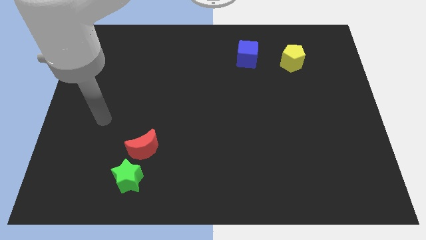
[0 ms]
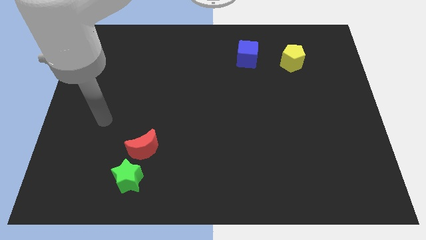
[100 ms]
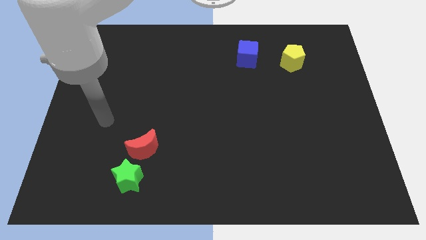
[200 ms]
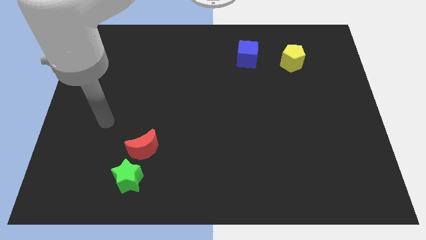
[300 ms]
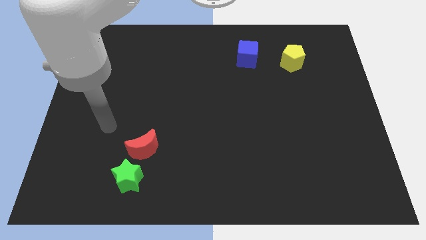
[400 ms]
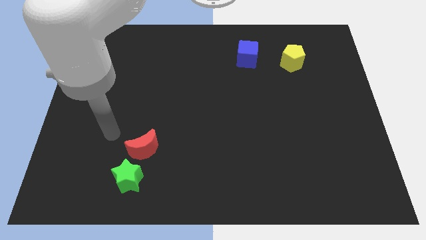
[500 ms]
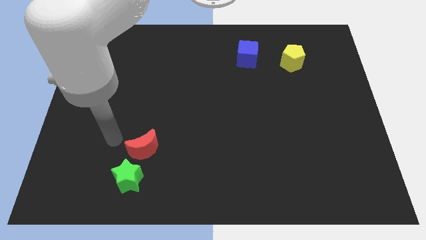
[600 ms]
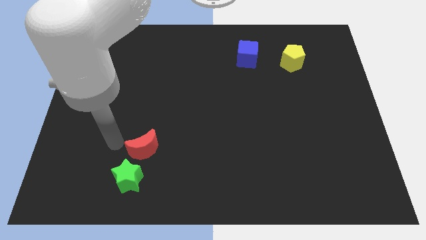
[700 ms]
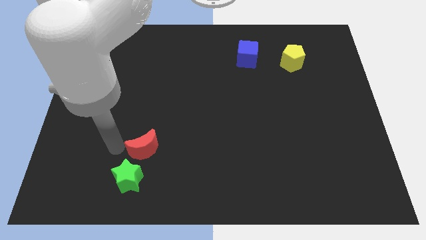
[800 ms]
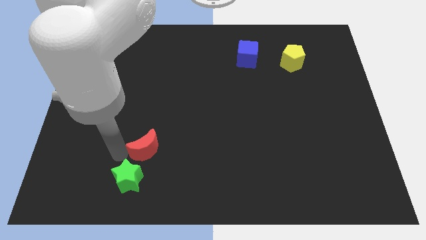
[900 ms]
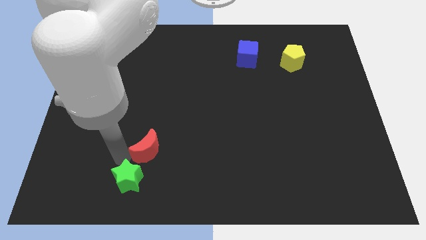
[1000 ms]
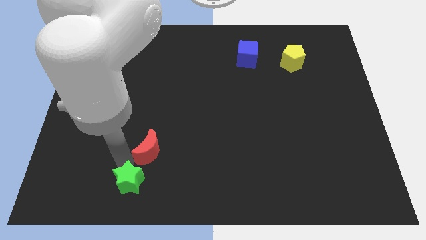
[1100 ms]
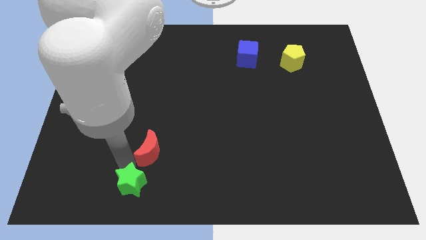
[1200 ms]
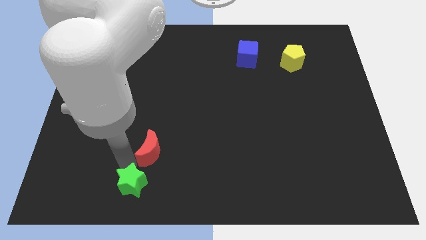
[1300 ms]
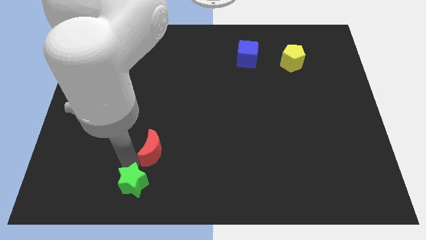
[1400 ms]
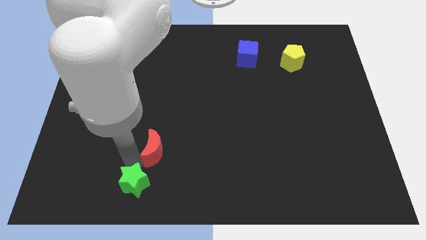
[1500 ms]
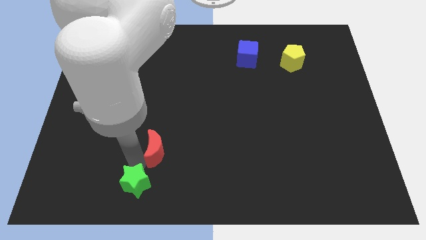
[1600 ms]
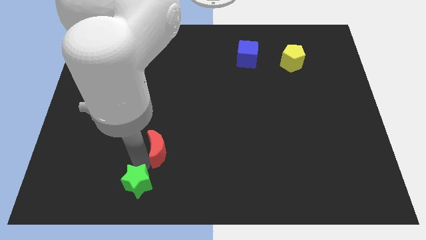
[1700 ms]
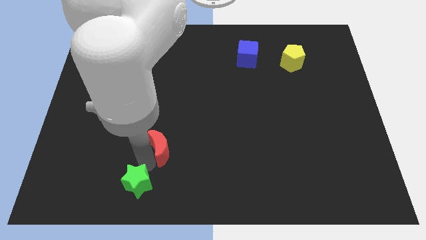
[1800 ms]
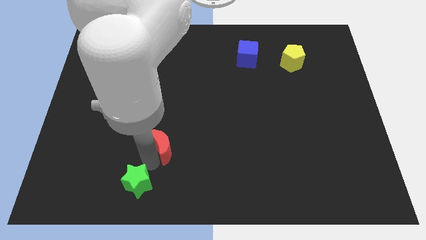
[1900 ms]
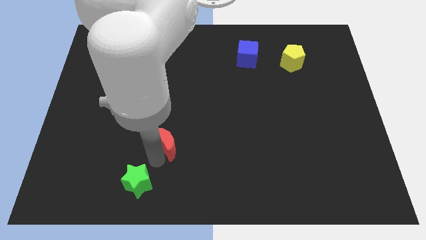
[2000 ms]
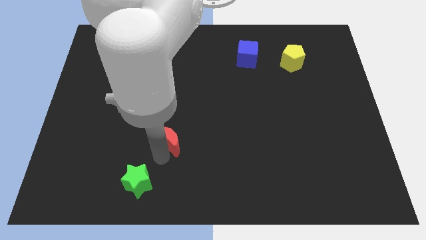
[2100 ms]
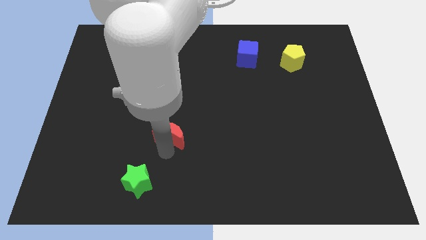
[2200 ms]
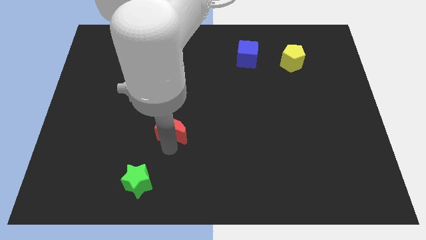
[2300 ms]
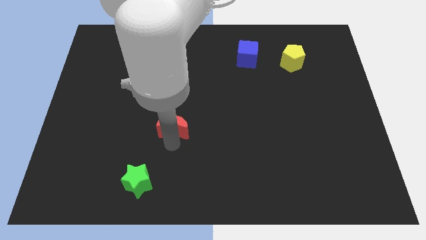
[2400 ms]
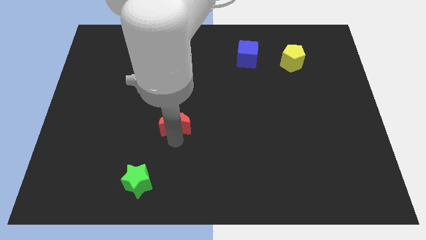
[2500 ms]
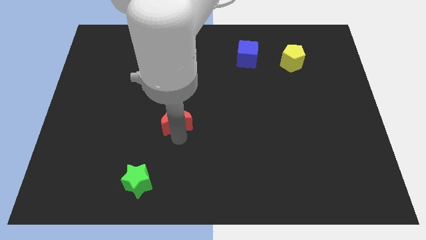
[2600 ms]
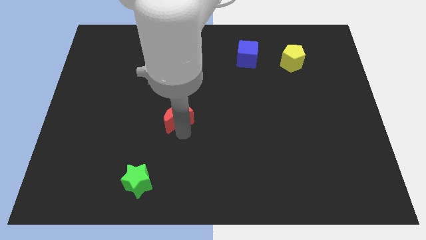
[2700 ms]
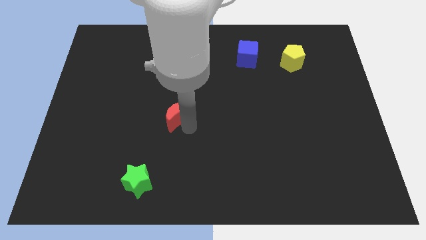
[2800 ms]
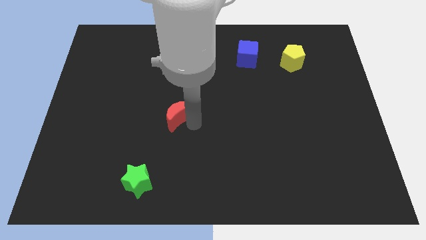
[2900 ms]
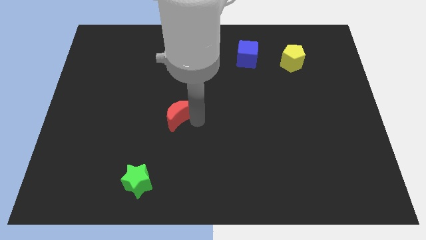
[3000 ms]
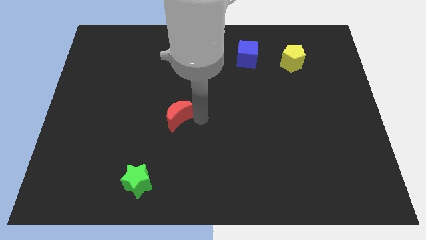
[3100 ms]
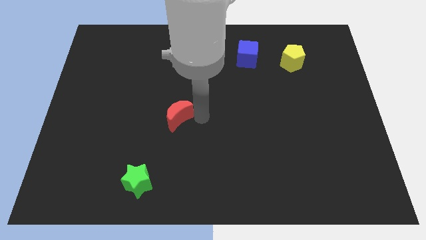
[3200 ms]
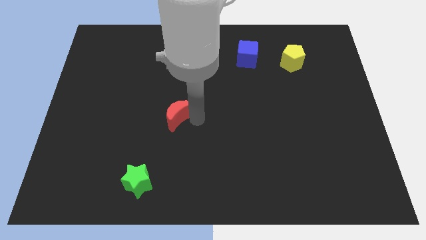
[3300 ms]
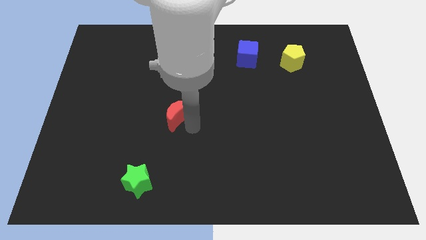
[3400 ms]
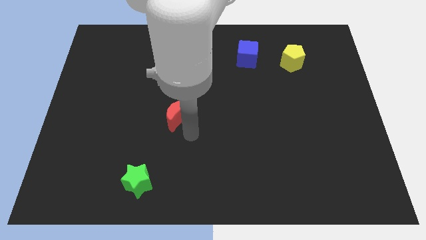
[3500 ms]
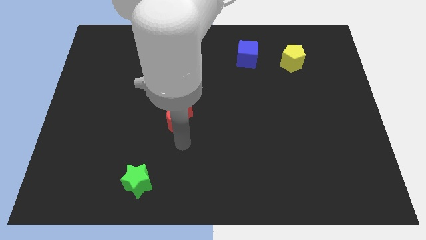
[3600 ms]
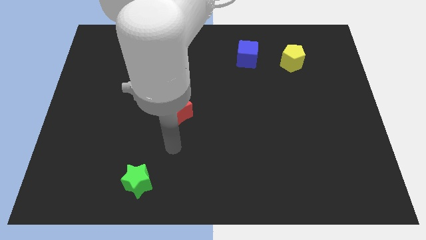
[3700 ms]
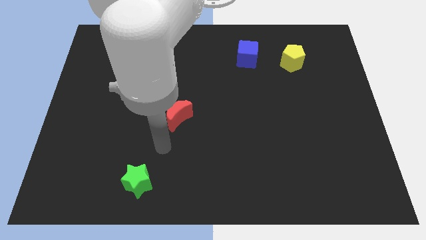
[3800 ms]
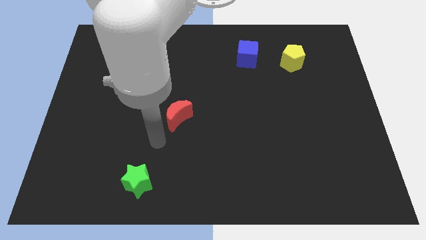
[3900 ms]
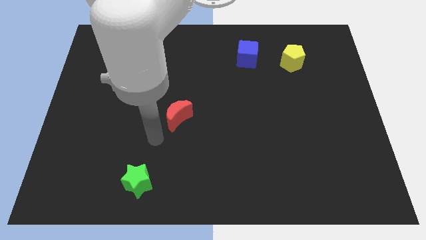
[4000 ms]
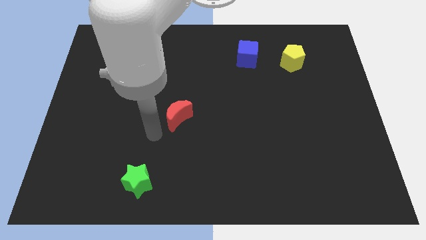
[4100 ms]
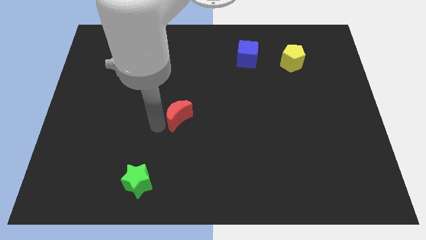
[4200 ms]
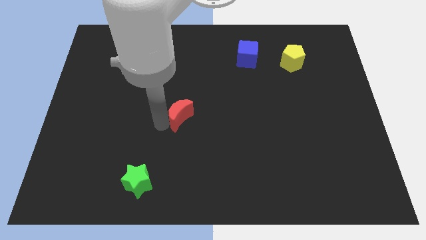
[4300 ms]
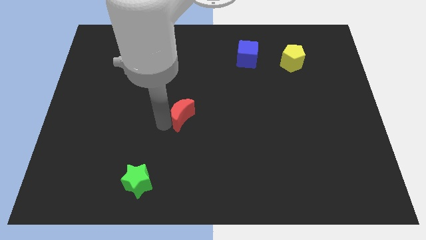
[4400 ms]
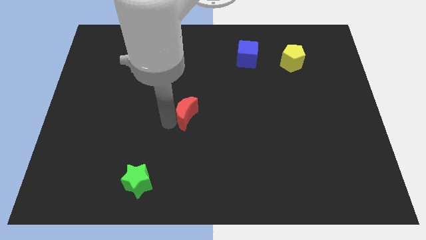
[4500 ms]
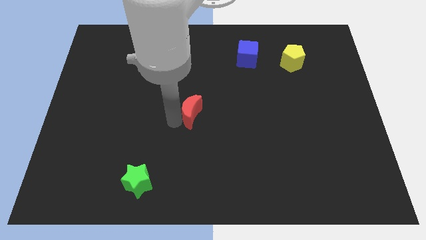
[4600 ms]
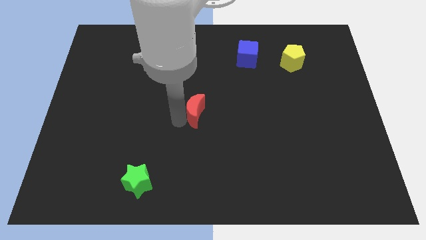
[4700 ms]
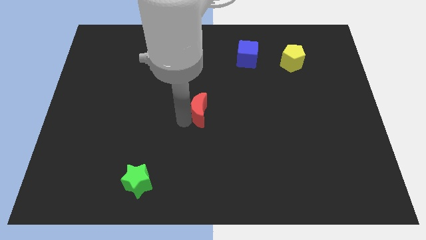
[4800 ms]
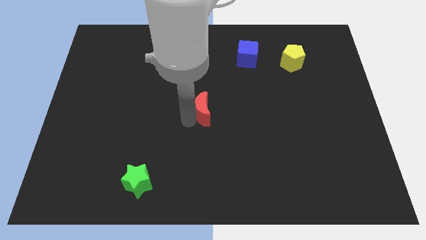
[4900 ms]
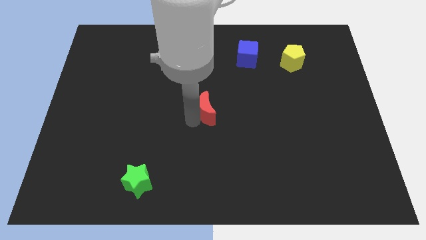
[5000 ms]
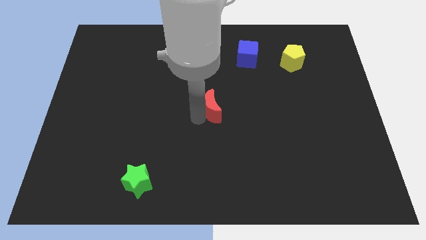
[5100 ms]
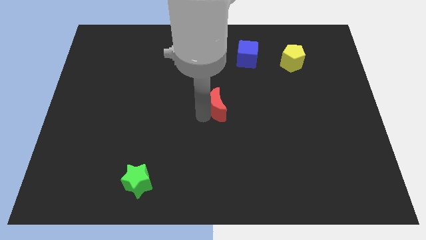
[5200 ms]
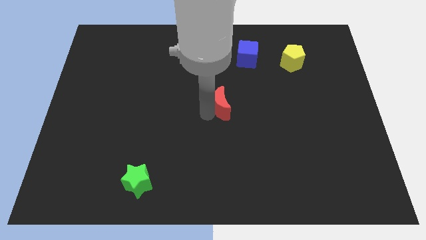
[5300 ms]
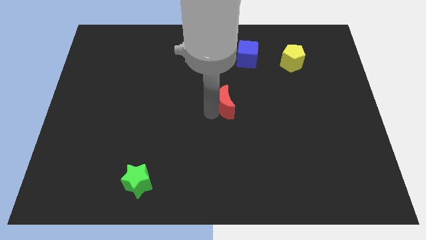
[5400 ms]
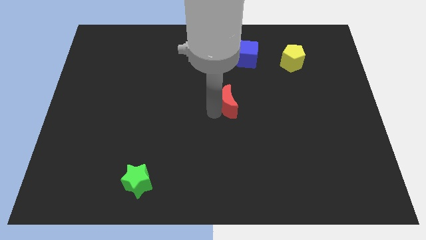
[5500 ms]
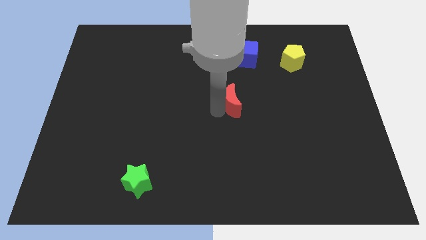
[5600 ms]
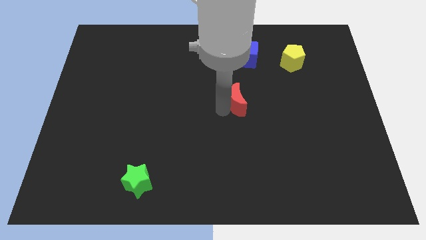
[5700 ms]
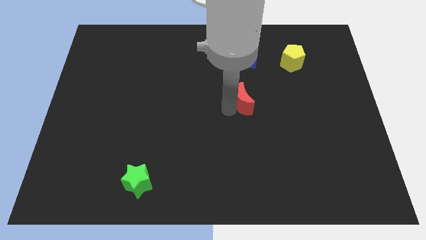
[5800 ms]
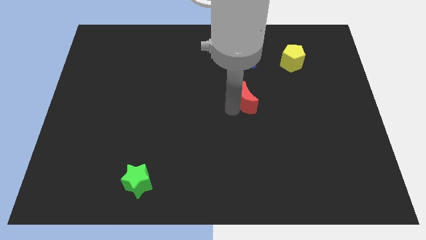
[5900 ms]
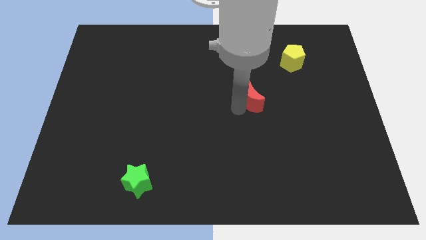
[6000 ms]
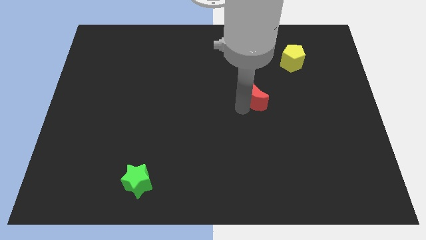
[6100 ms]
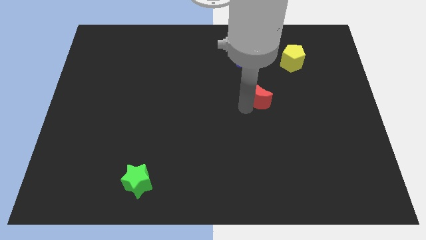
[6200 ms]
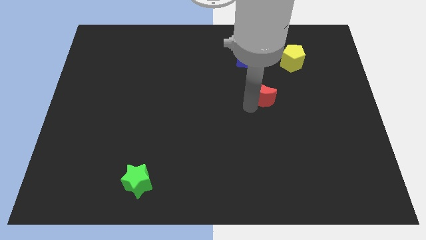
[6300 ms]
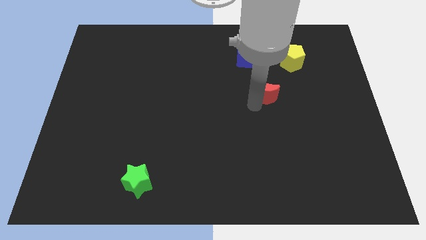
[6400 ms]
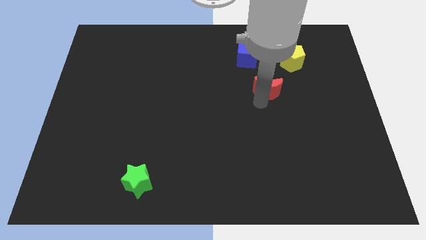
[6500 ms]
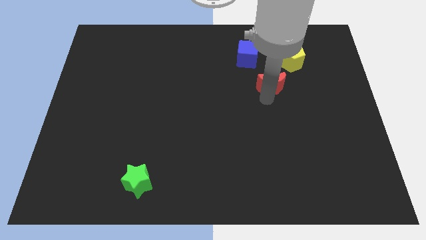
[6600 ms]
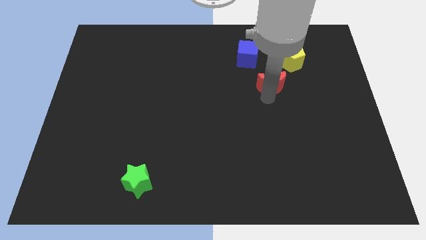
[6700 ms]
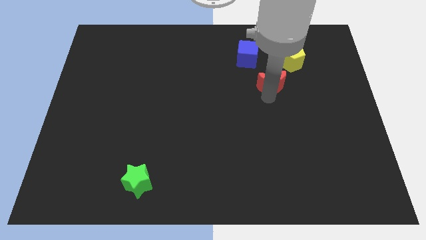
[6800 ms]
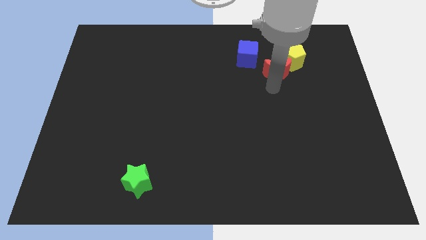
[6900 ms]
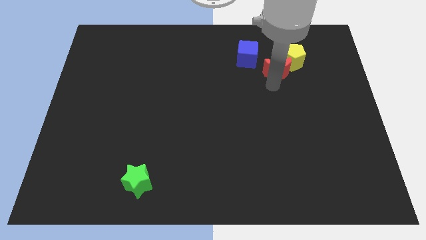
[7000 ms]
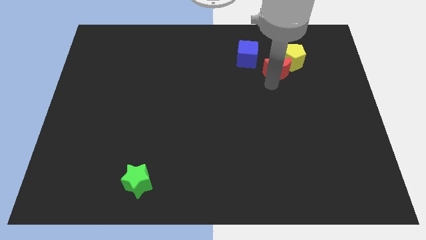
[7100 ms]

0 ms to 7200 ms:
put the moon towards the yellow pentagon

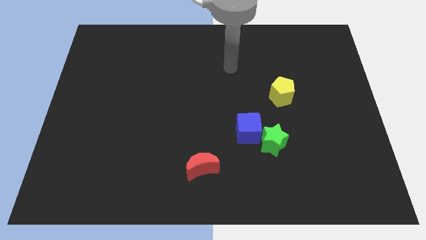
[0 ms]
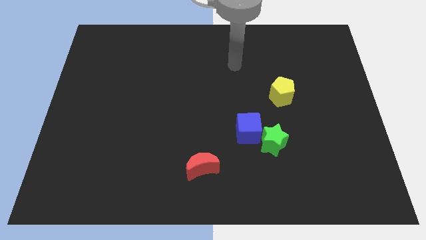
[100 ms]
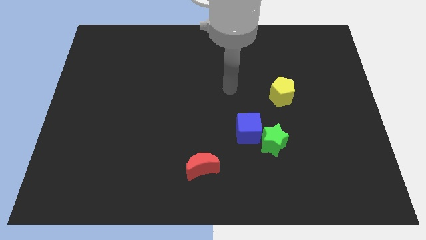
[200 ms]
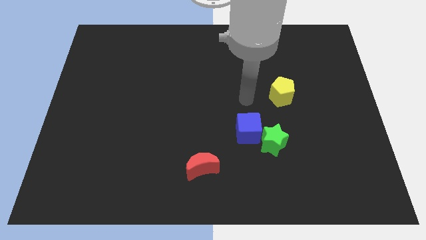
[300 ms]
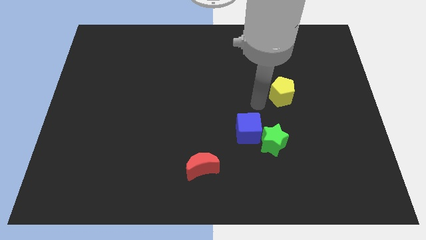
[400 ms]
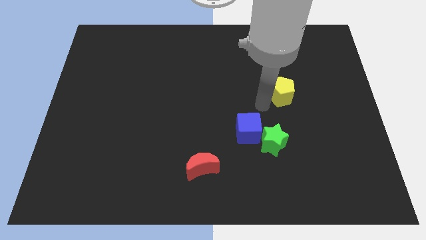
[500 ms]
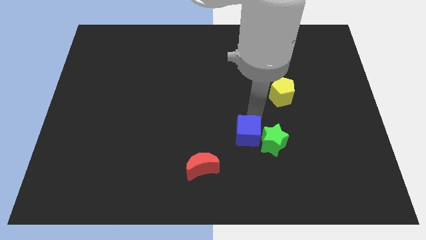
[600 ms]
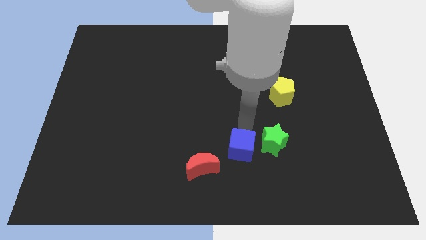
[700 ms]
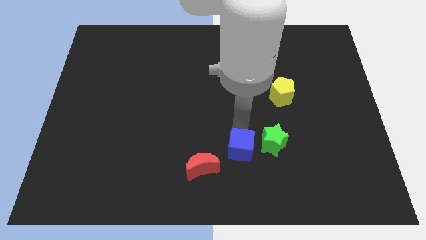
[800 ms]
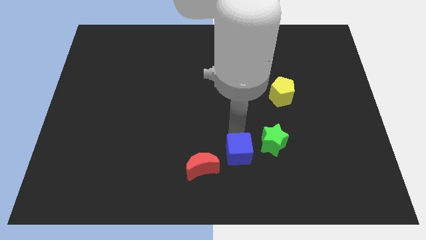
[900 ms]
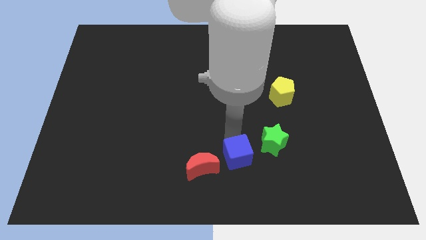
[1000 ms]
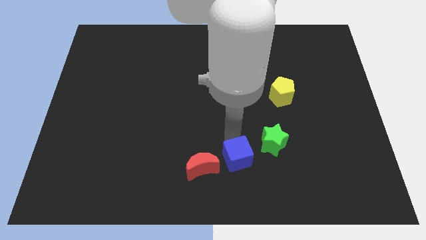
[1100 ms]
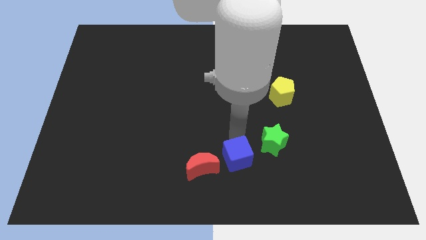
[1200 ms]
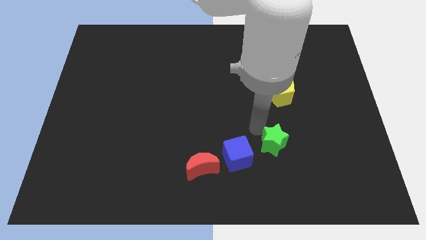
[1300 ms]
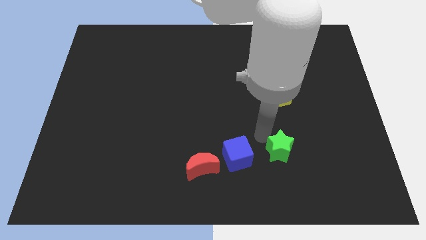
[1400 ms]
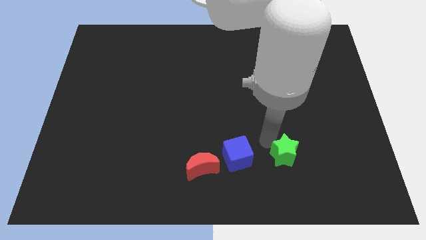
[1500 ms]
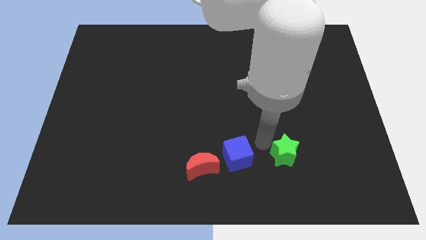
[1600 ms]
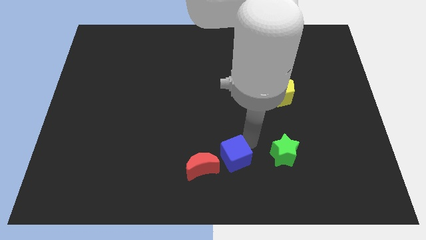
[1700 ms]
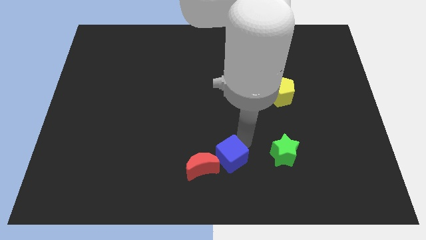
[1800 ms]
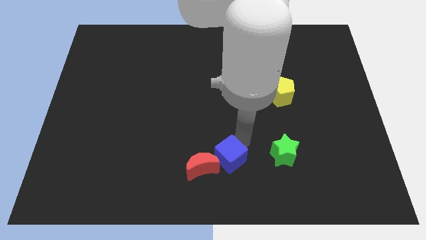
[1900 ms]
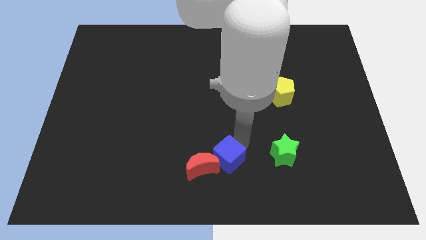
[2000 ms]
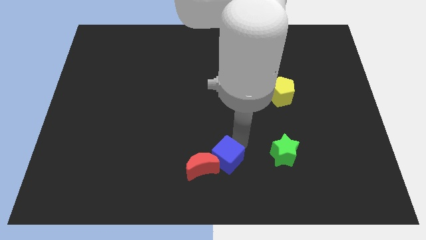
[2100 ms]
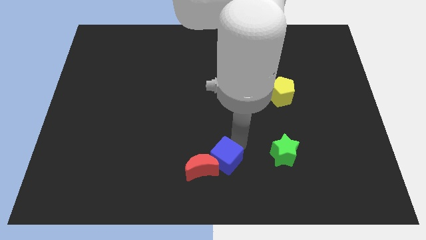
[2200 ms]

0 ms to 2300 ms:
move the cube towards the moon
